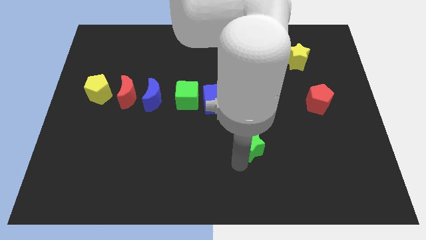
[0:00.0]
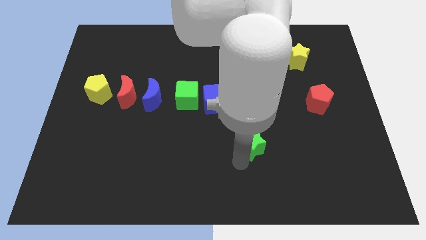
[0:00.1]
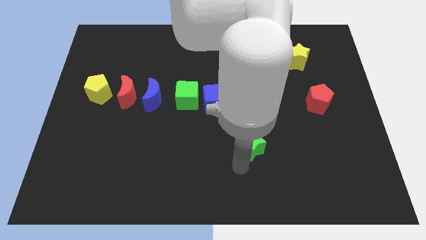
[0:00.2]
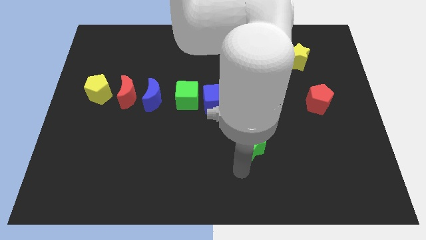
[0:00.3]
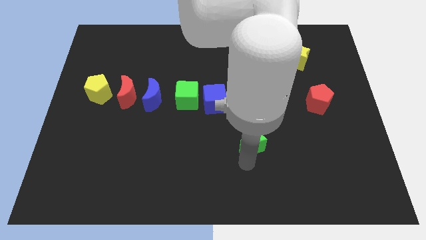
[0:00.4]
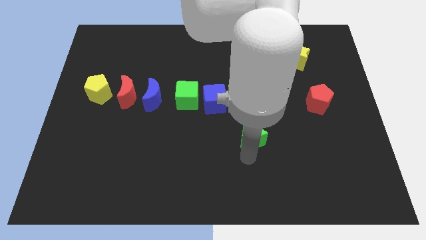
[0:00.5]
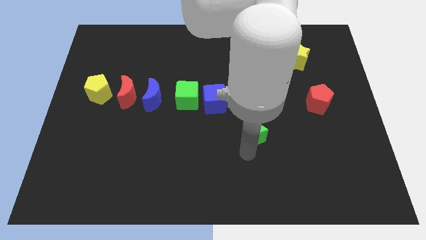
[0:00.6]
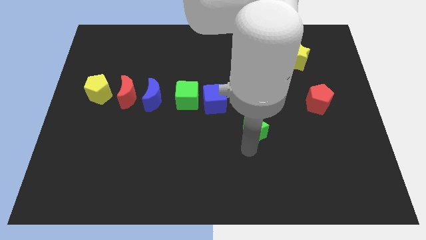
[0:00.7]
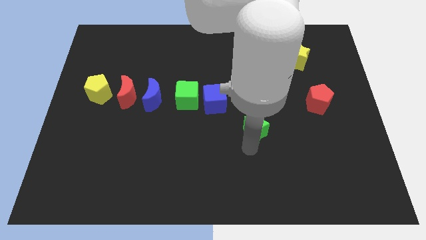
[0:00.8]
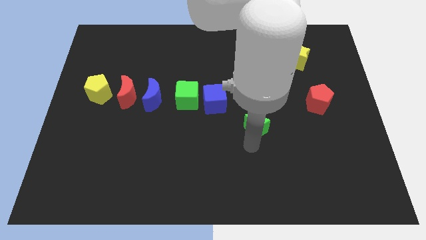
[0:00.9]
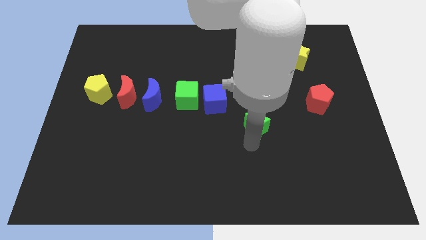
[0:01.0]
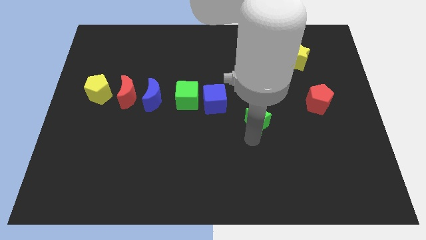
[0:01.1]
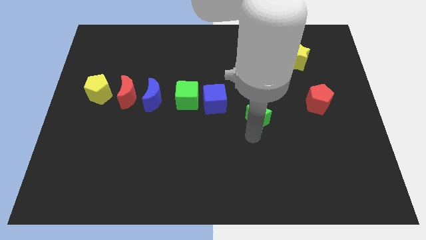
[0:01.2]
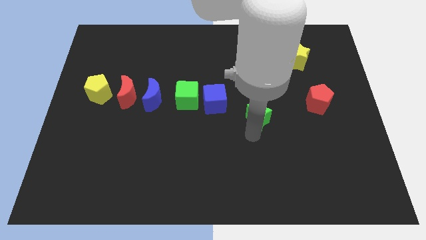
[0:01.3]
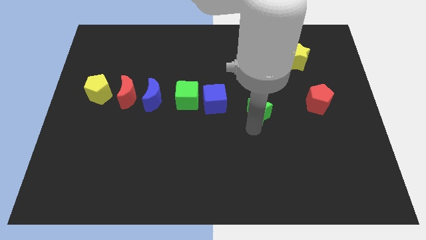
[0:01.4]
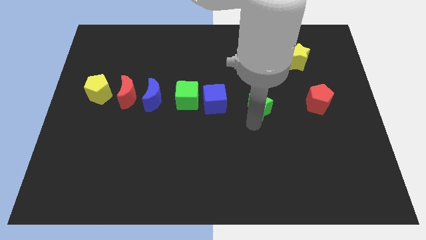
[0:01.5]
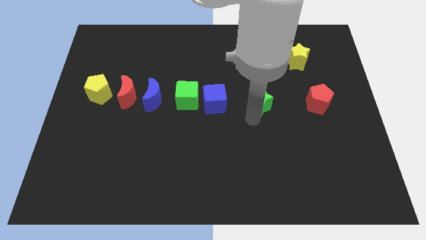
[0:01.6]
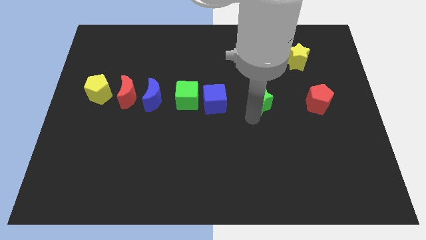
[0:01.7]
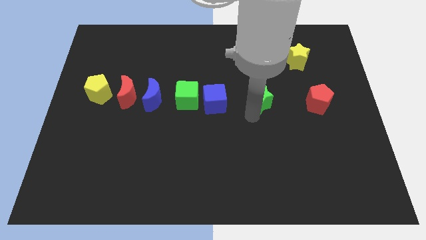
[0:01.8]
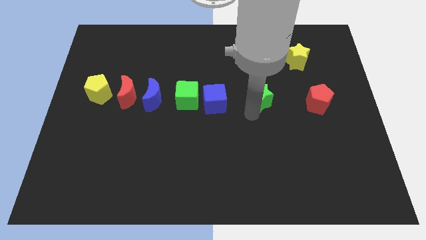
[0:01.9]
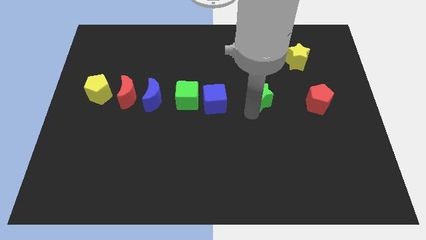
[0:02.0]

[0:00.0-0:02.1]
place green star to the right of blue cube

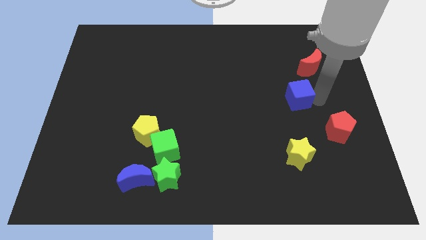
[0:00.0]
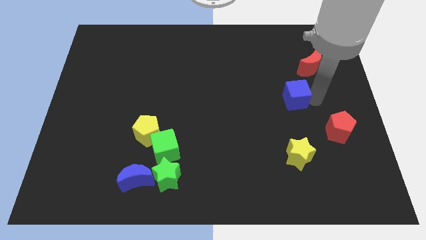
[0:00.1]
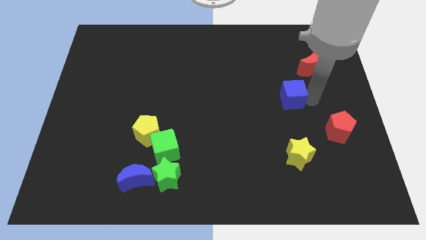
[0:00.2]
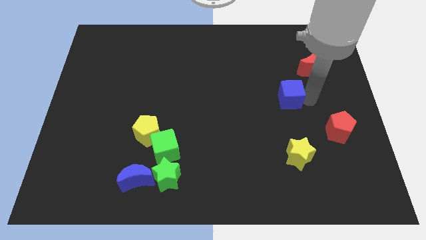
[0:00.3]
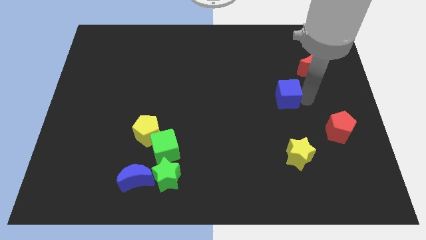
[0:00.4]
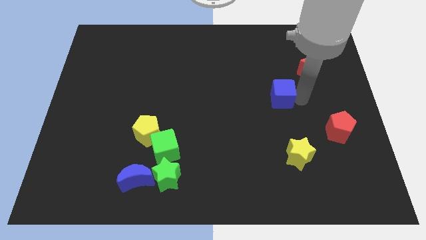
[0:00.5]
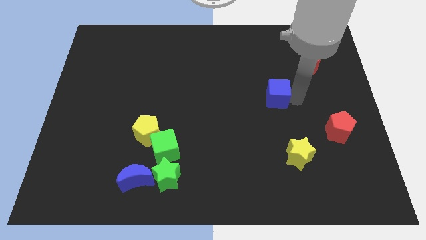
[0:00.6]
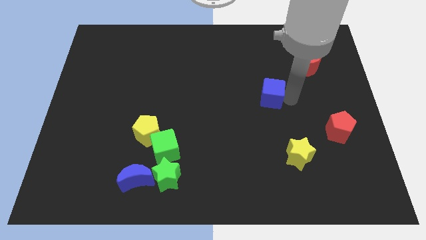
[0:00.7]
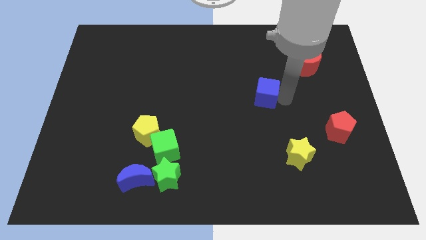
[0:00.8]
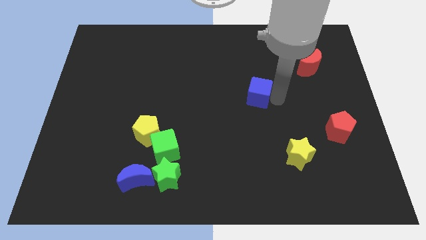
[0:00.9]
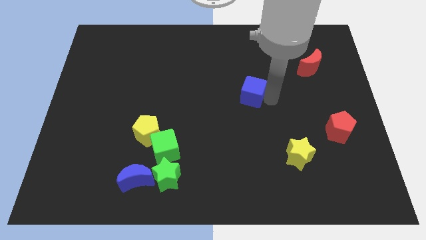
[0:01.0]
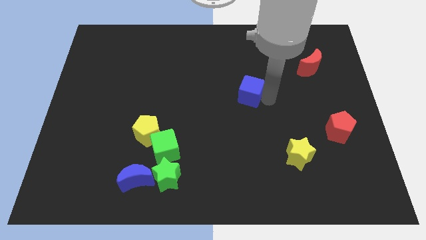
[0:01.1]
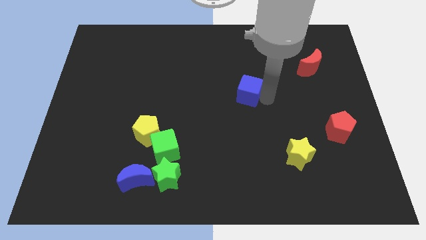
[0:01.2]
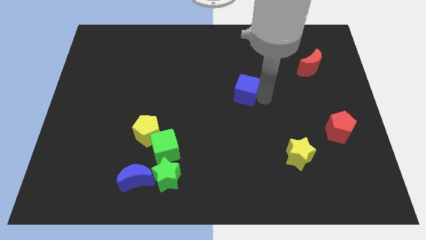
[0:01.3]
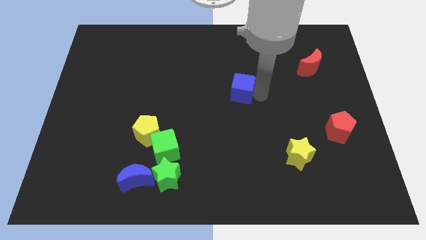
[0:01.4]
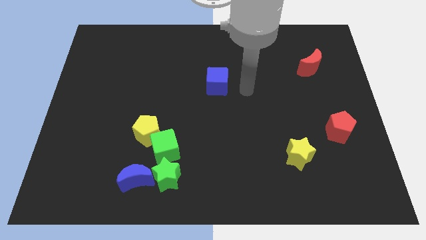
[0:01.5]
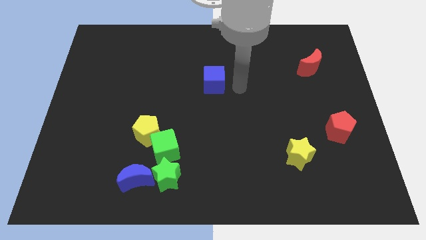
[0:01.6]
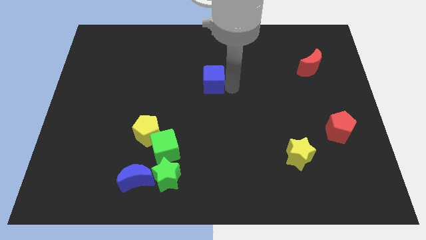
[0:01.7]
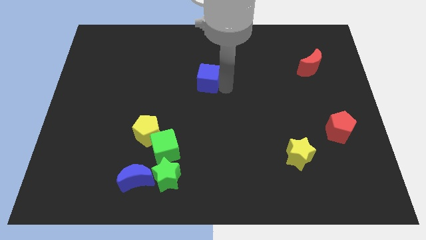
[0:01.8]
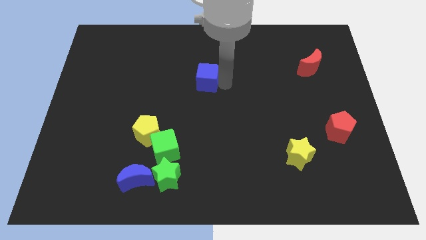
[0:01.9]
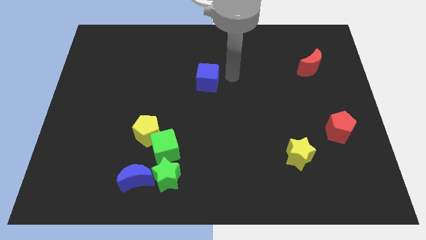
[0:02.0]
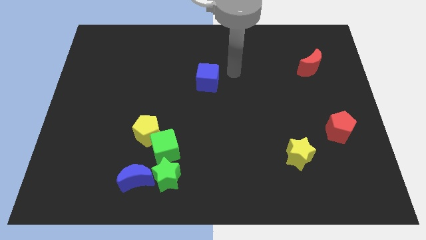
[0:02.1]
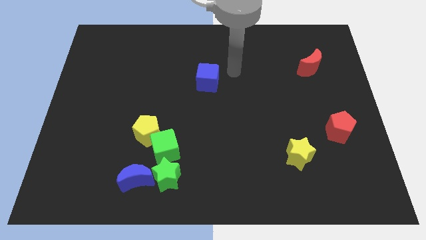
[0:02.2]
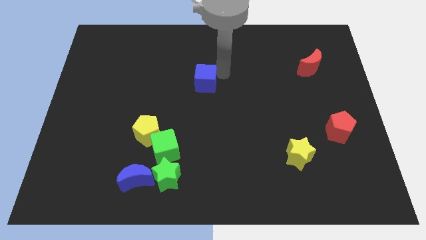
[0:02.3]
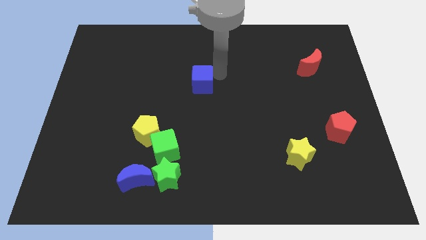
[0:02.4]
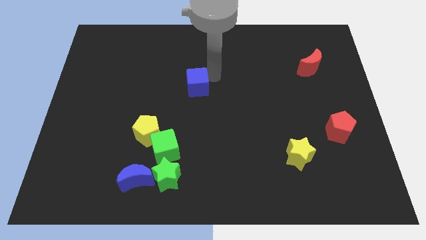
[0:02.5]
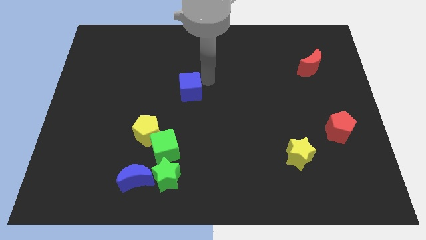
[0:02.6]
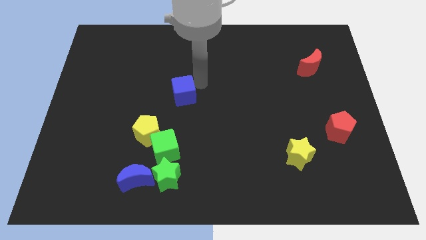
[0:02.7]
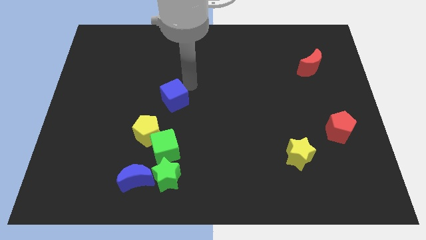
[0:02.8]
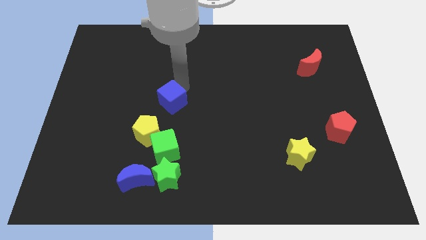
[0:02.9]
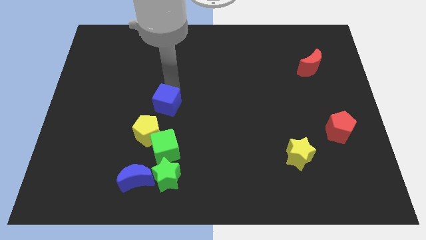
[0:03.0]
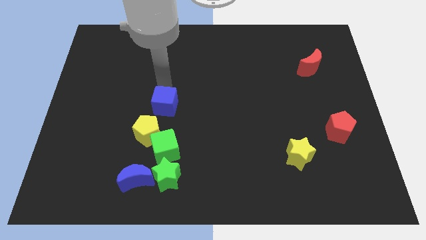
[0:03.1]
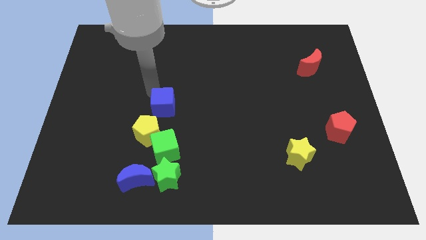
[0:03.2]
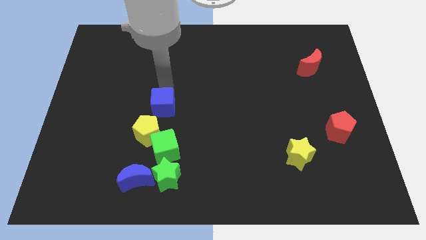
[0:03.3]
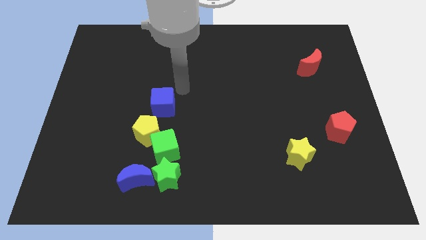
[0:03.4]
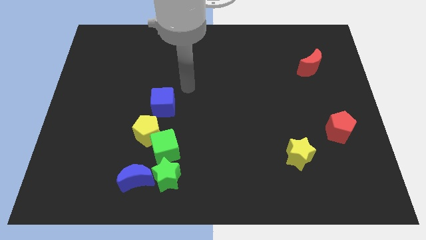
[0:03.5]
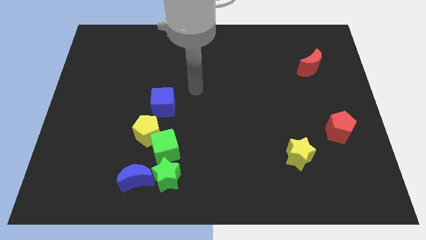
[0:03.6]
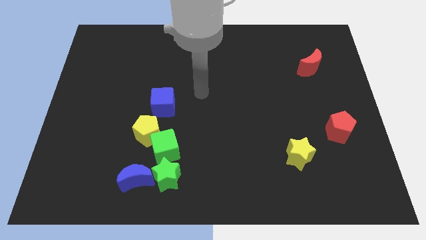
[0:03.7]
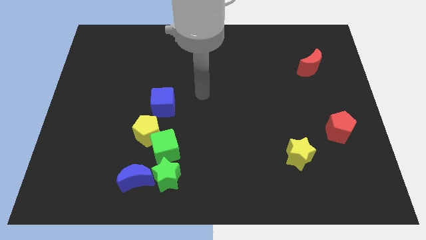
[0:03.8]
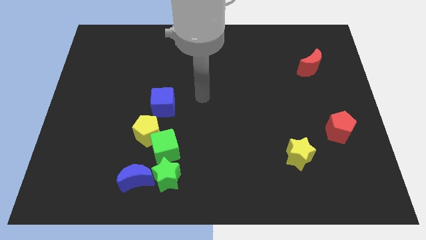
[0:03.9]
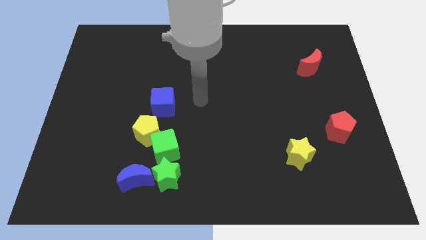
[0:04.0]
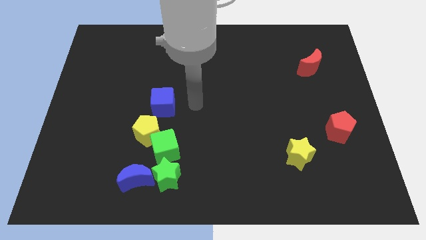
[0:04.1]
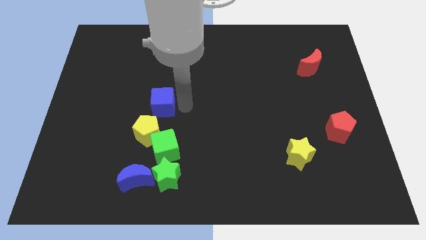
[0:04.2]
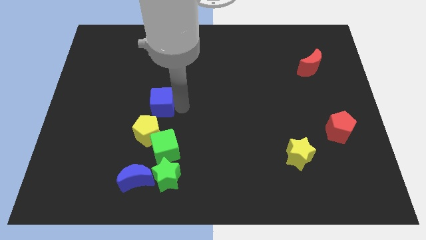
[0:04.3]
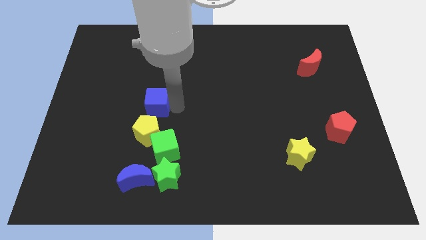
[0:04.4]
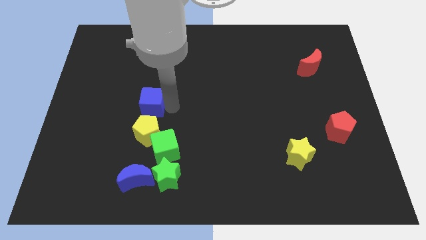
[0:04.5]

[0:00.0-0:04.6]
place the blue cube above the green cube

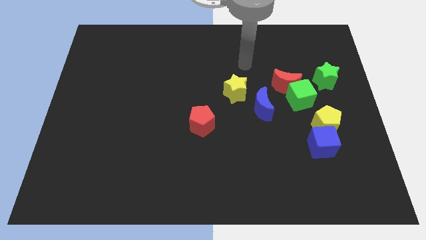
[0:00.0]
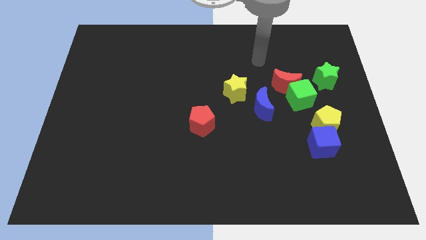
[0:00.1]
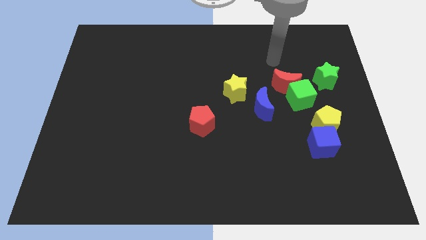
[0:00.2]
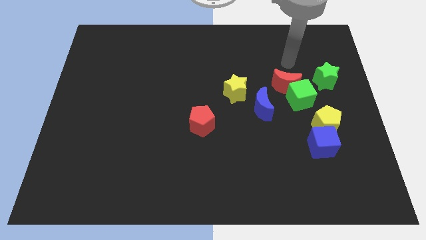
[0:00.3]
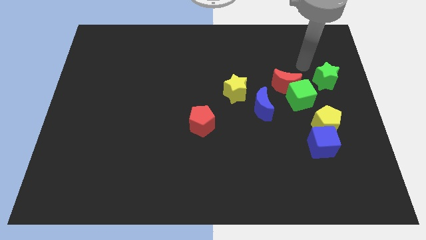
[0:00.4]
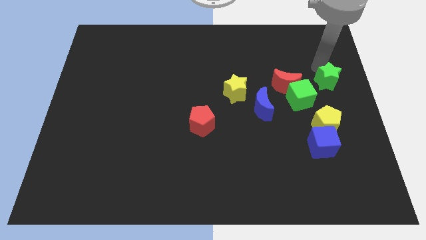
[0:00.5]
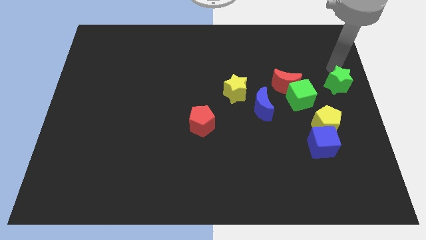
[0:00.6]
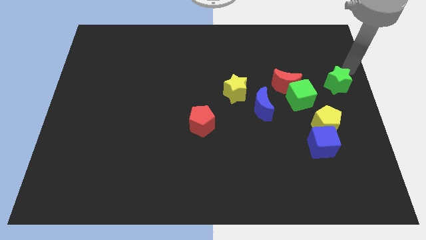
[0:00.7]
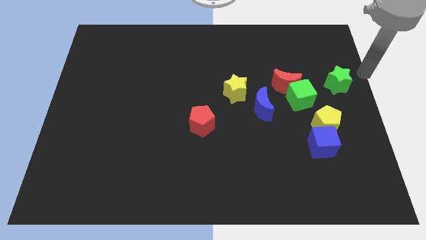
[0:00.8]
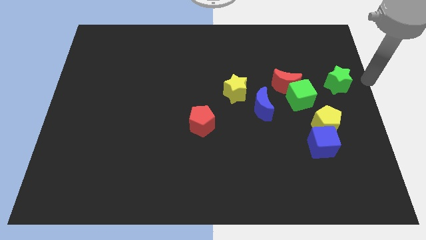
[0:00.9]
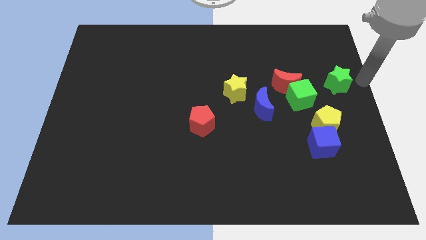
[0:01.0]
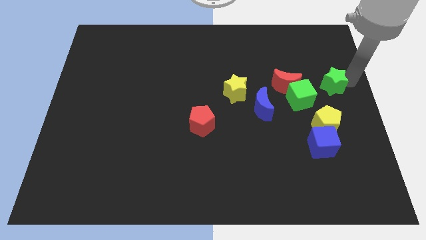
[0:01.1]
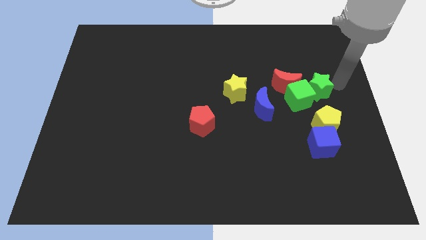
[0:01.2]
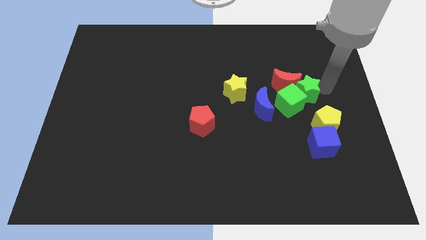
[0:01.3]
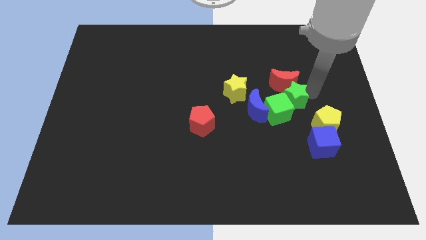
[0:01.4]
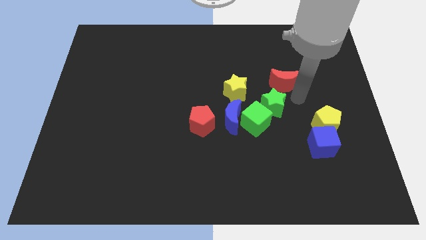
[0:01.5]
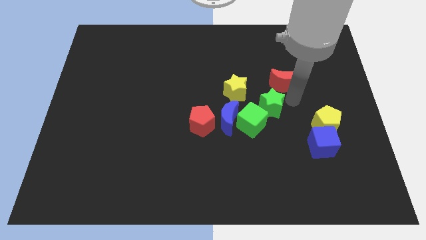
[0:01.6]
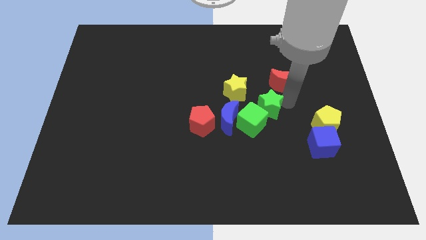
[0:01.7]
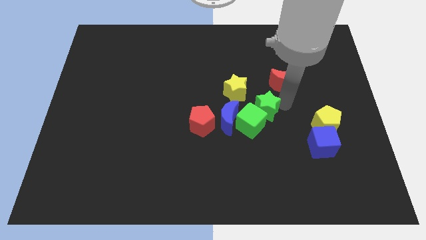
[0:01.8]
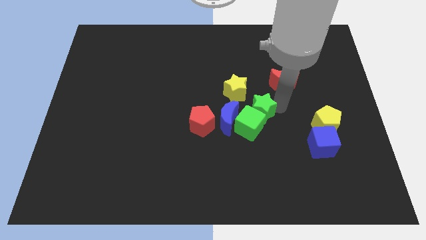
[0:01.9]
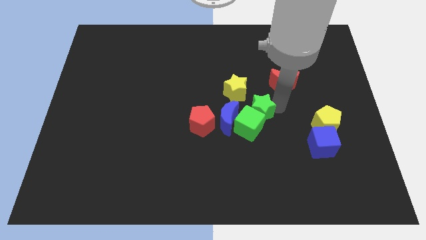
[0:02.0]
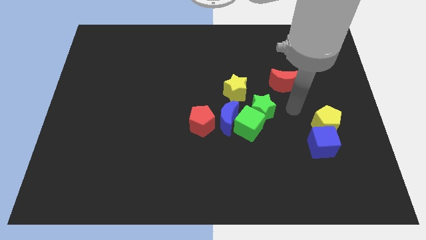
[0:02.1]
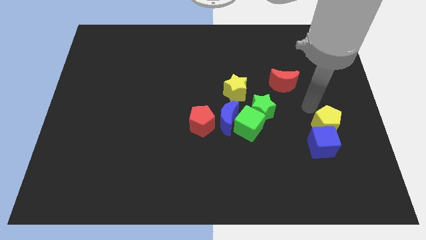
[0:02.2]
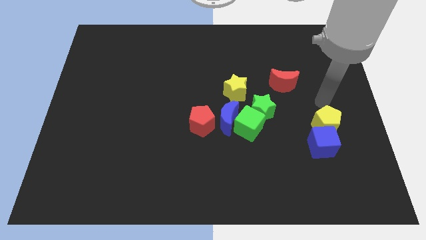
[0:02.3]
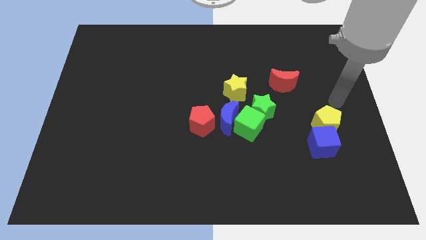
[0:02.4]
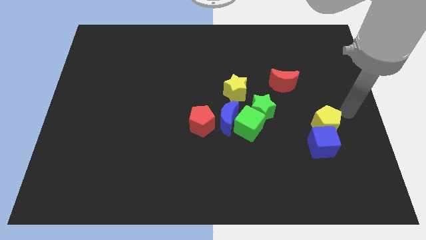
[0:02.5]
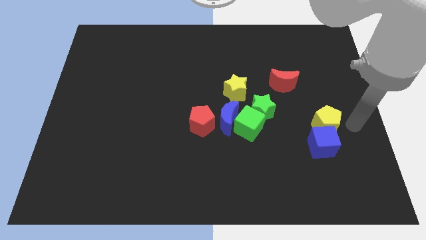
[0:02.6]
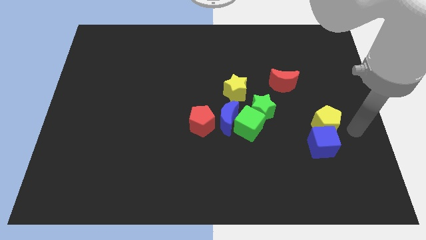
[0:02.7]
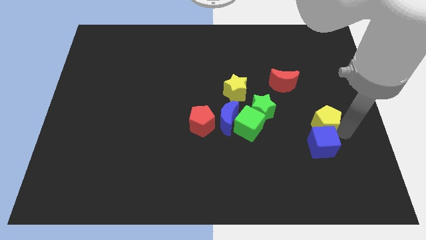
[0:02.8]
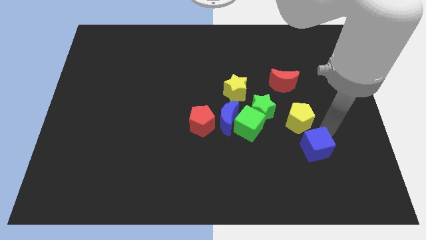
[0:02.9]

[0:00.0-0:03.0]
push the blue moon with green cube
